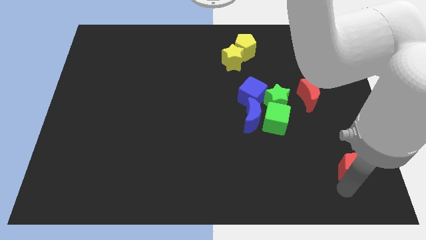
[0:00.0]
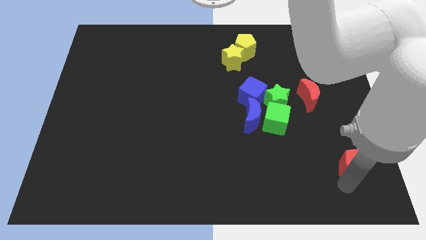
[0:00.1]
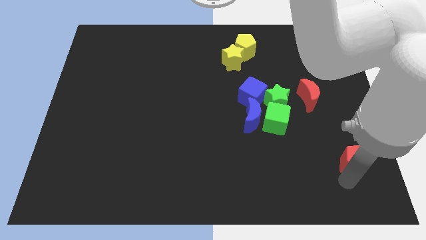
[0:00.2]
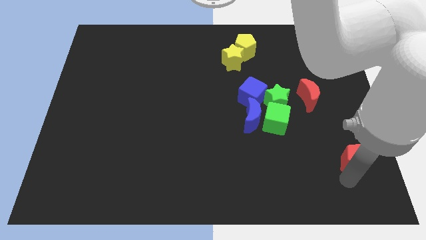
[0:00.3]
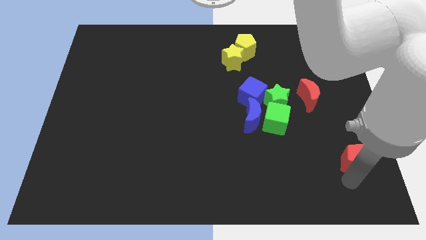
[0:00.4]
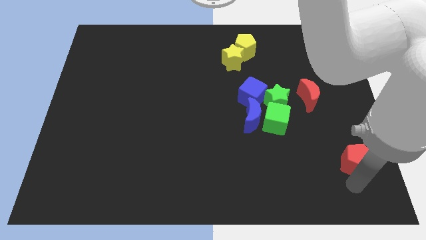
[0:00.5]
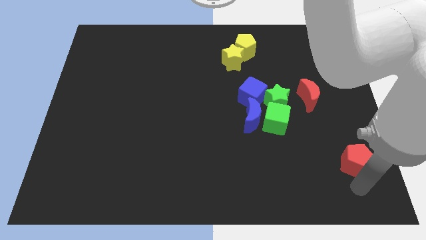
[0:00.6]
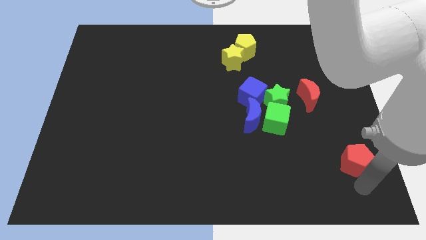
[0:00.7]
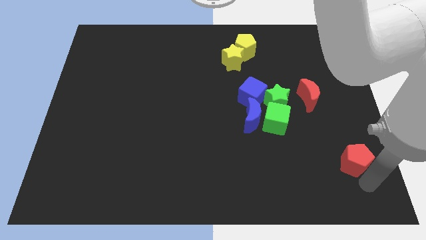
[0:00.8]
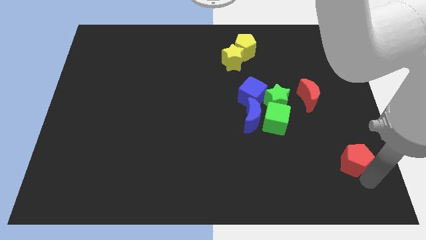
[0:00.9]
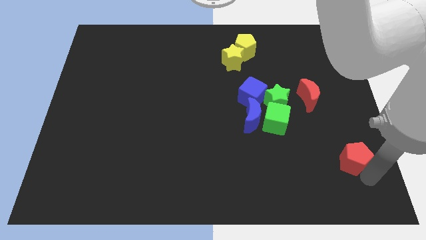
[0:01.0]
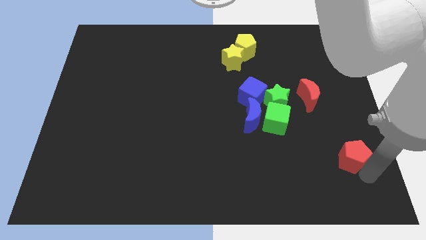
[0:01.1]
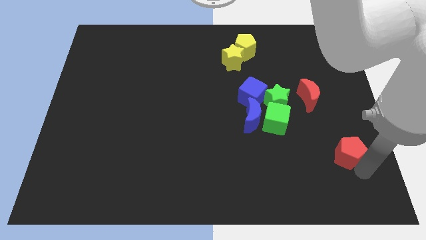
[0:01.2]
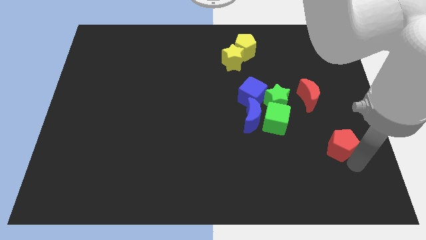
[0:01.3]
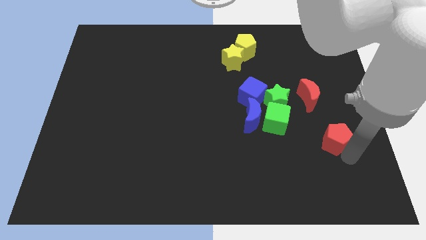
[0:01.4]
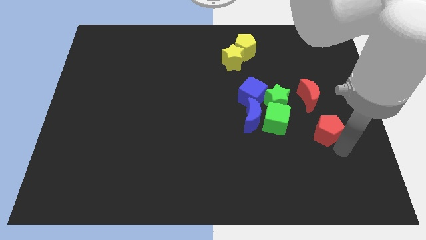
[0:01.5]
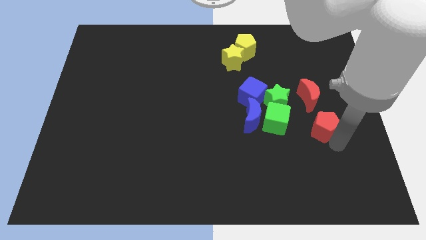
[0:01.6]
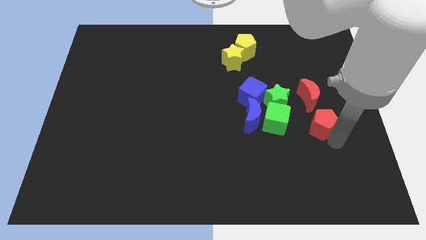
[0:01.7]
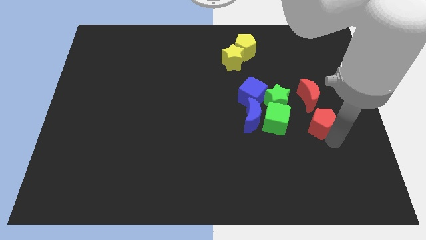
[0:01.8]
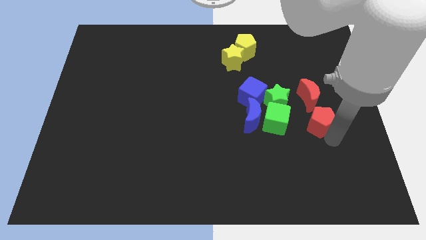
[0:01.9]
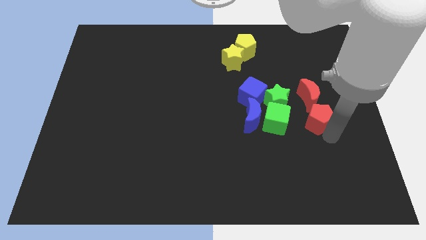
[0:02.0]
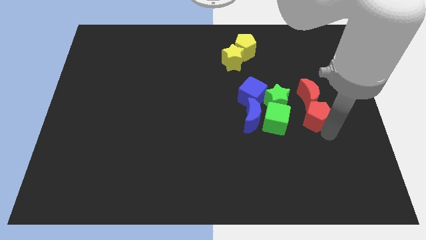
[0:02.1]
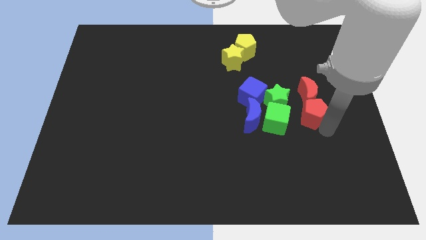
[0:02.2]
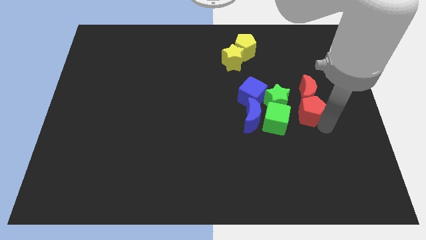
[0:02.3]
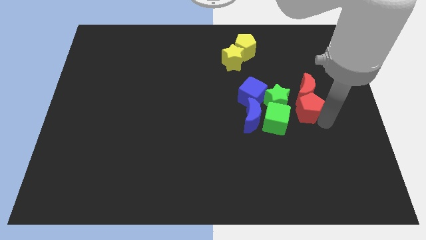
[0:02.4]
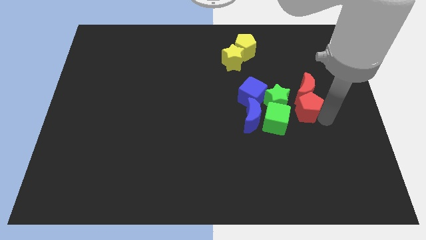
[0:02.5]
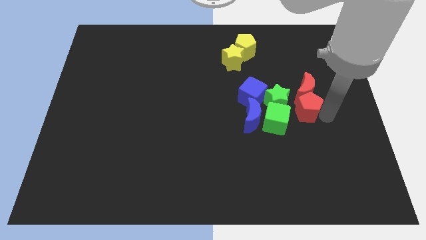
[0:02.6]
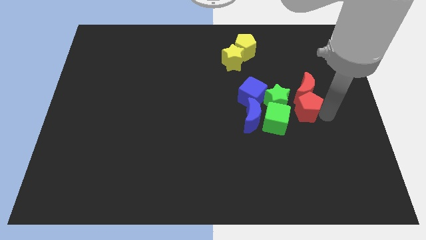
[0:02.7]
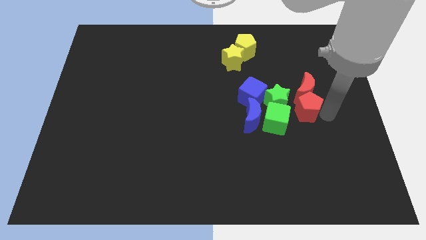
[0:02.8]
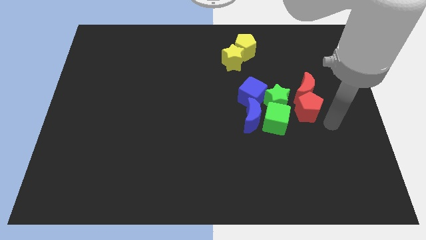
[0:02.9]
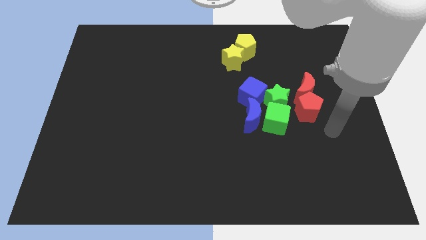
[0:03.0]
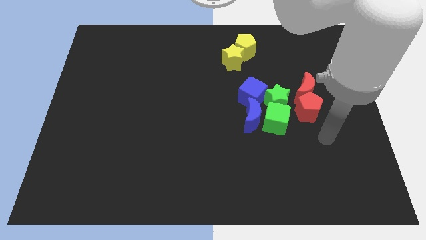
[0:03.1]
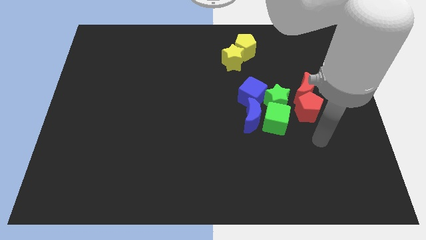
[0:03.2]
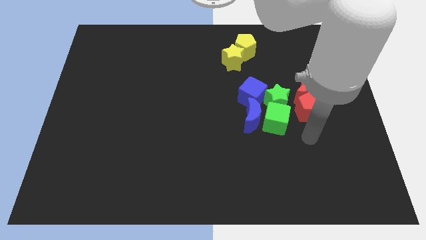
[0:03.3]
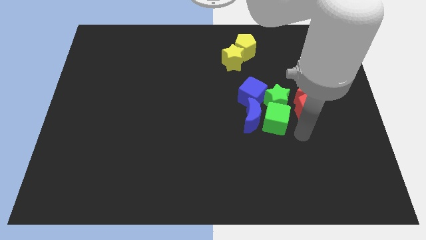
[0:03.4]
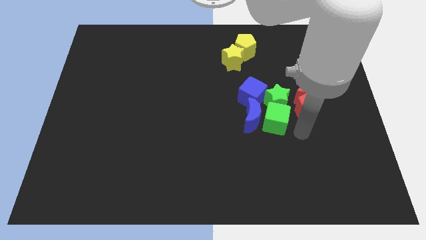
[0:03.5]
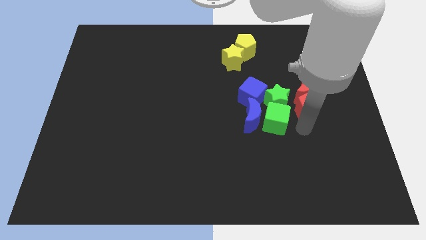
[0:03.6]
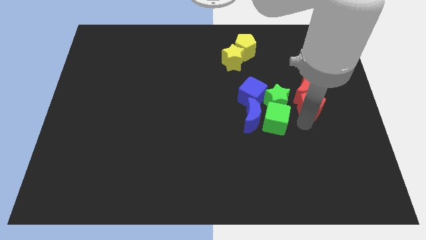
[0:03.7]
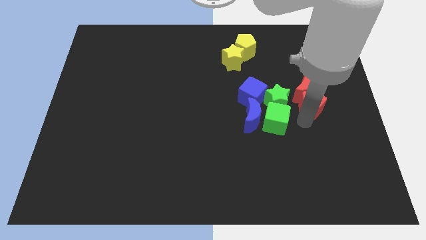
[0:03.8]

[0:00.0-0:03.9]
move red pentagon below the red crescent

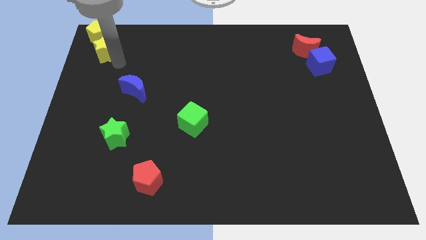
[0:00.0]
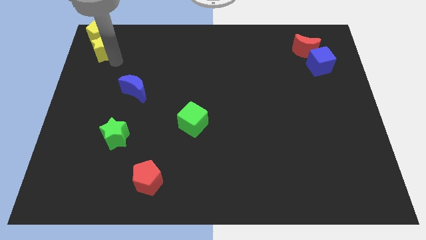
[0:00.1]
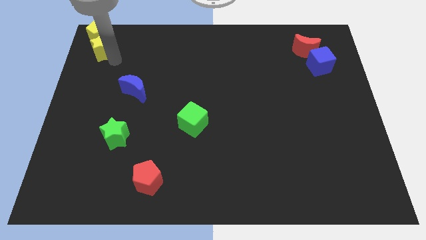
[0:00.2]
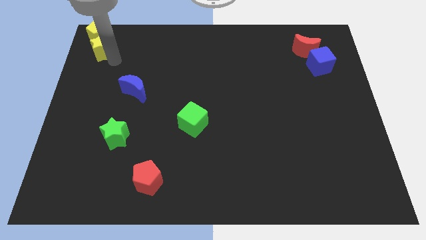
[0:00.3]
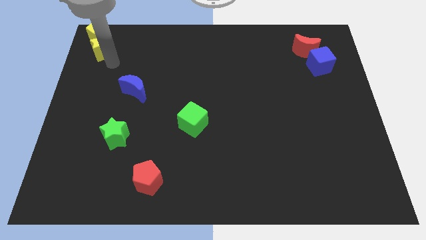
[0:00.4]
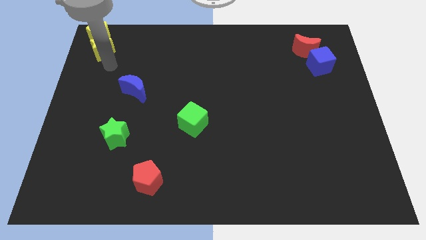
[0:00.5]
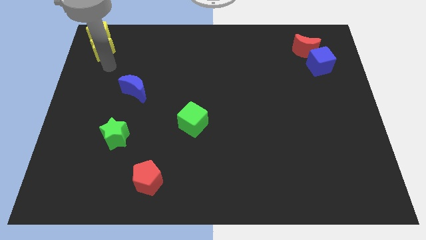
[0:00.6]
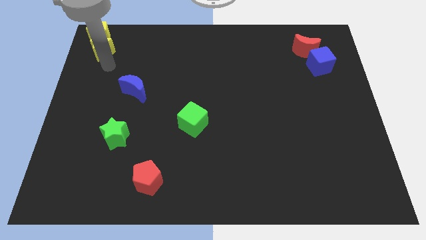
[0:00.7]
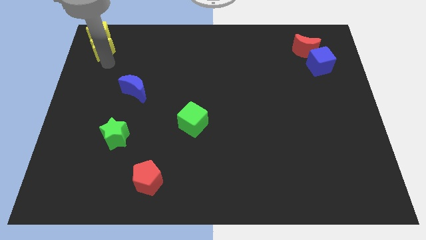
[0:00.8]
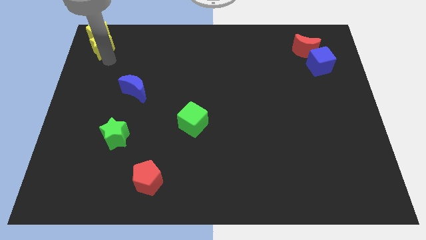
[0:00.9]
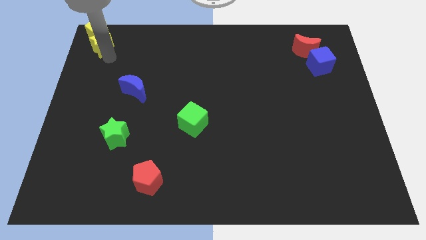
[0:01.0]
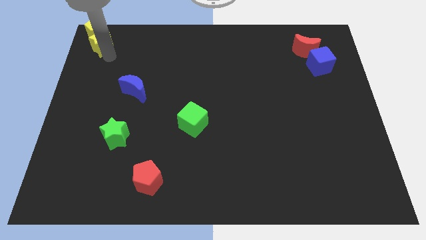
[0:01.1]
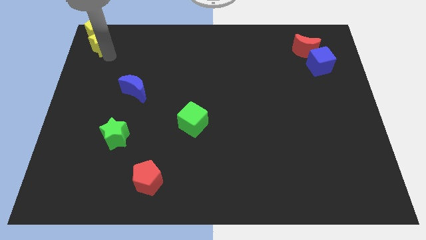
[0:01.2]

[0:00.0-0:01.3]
push yellow star towards yellow pentagon

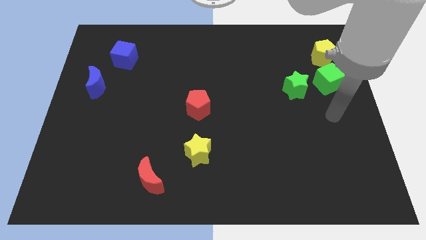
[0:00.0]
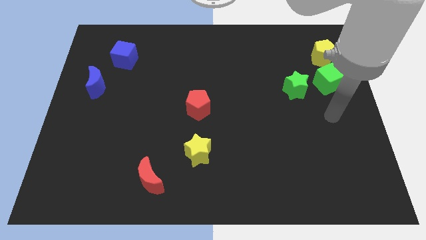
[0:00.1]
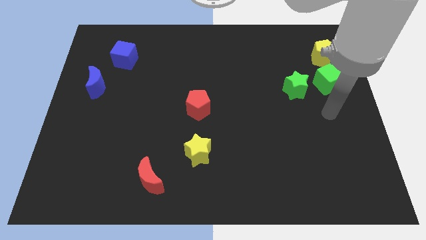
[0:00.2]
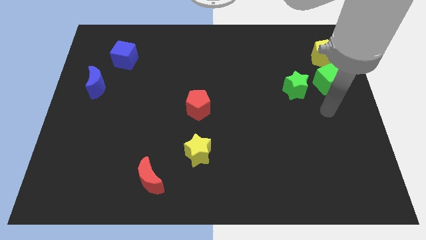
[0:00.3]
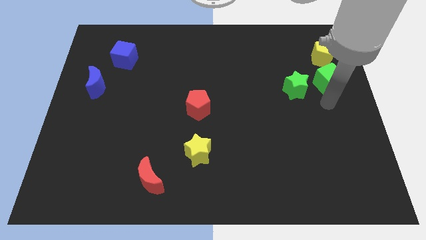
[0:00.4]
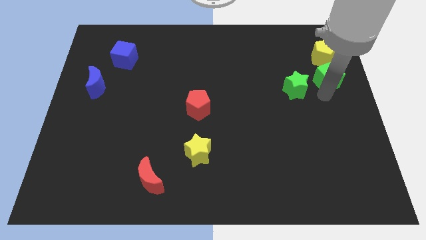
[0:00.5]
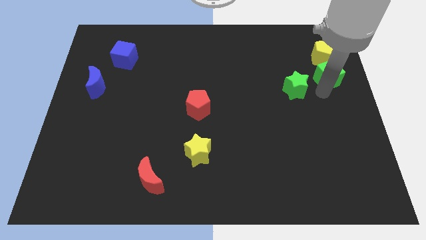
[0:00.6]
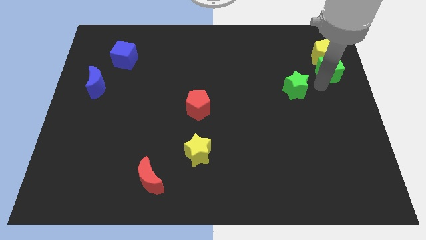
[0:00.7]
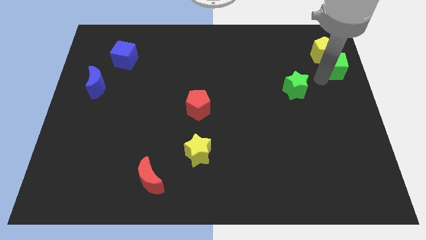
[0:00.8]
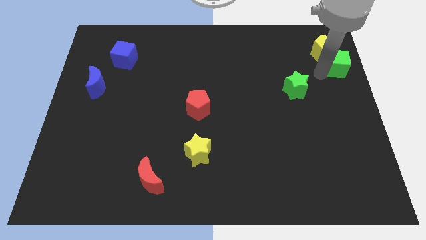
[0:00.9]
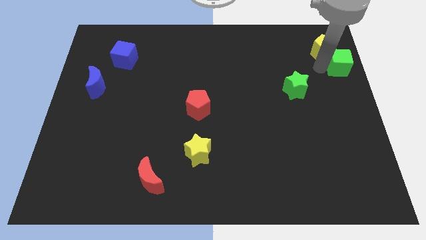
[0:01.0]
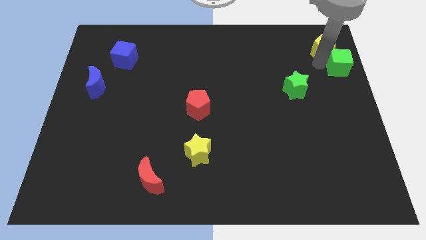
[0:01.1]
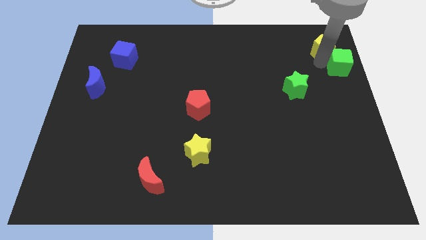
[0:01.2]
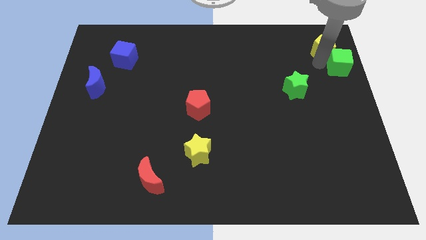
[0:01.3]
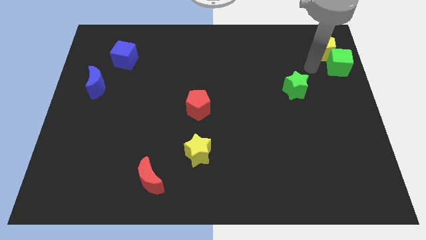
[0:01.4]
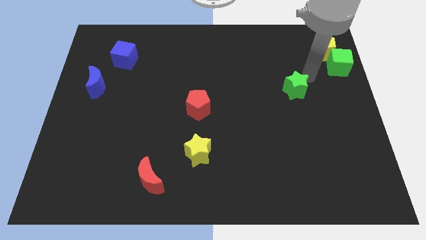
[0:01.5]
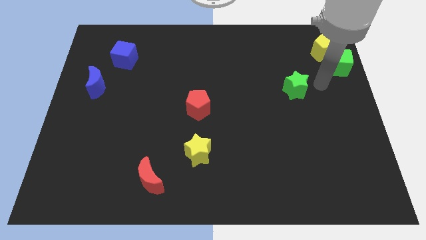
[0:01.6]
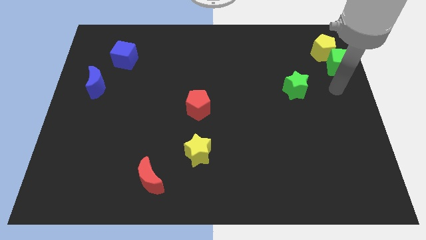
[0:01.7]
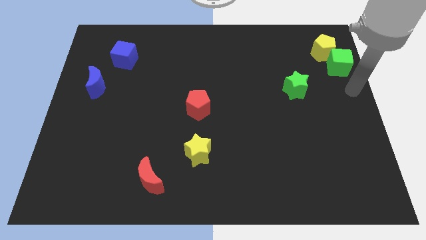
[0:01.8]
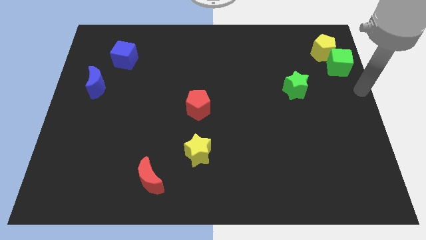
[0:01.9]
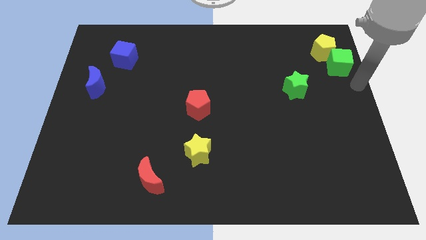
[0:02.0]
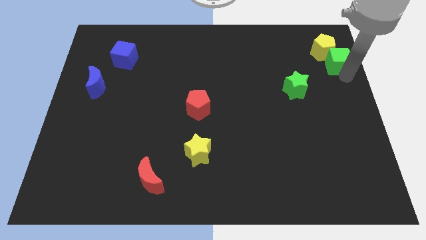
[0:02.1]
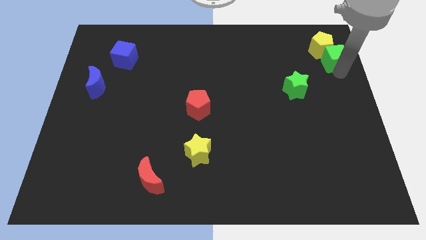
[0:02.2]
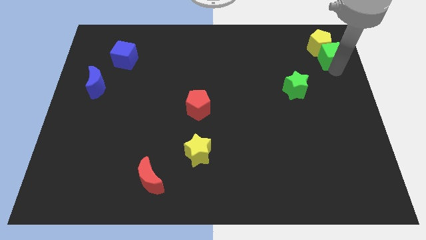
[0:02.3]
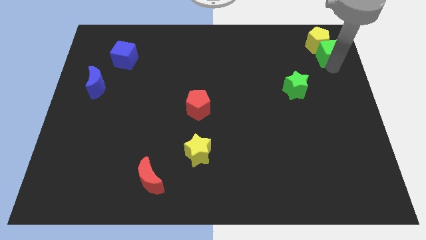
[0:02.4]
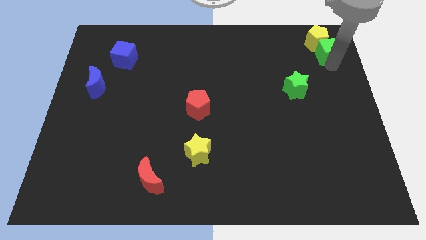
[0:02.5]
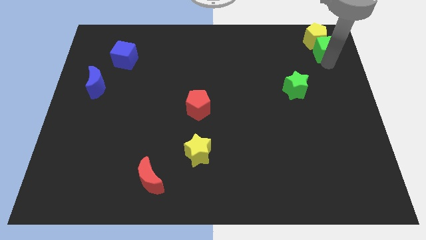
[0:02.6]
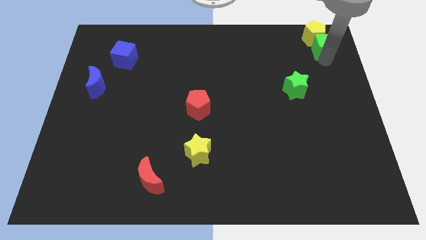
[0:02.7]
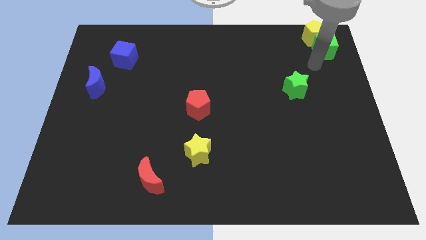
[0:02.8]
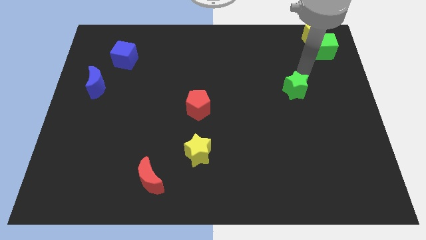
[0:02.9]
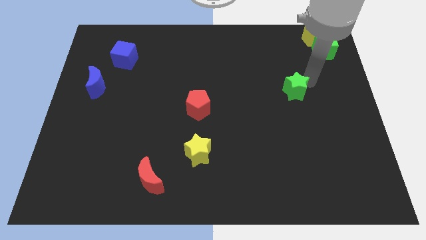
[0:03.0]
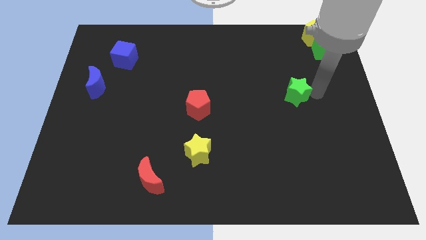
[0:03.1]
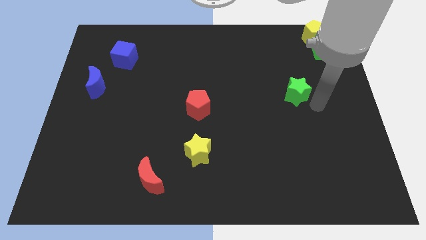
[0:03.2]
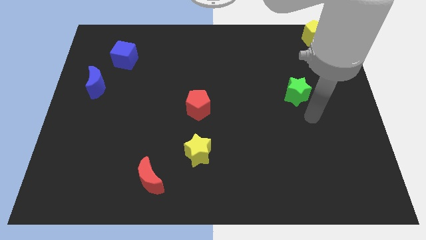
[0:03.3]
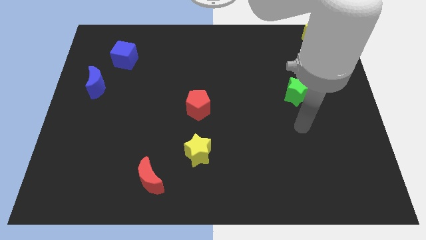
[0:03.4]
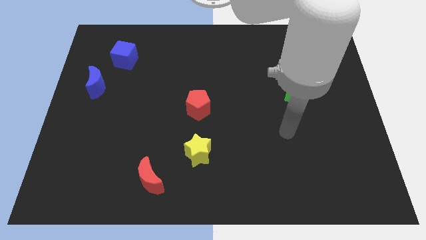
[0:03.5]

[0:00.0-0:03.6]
push the green cube to the top of the board with the yellow pentagon

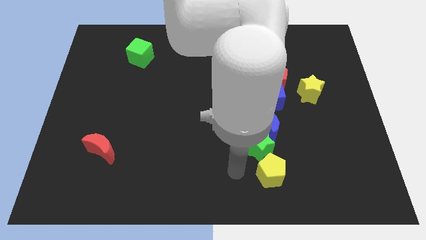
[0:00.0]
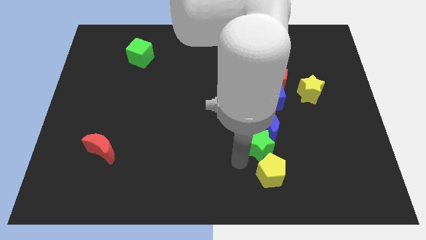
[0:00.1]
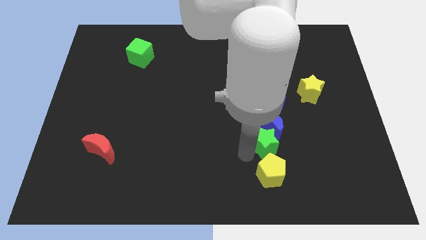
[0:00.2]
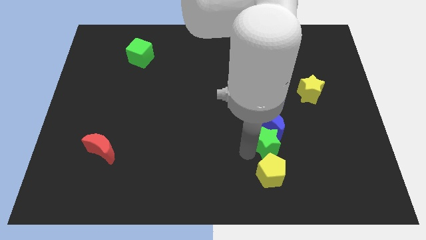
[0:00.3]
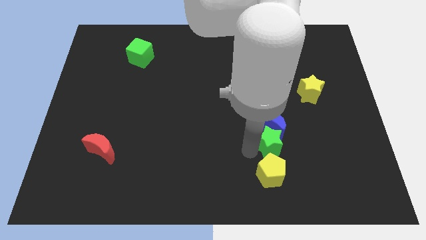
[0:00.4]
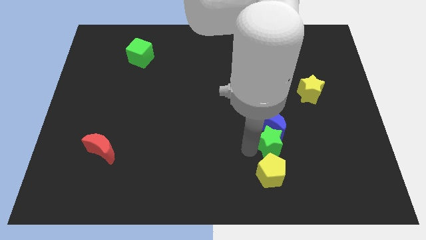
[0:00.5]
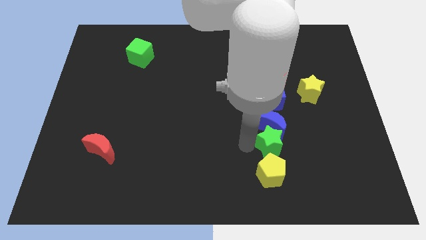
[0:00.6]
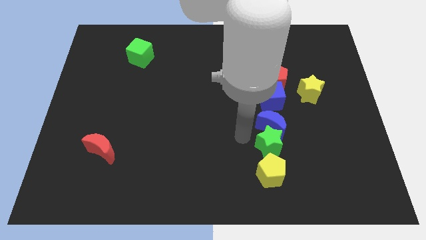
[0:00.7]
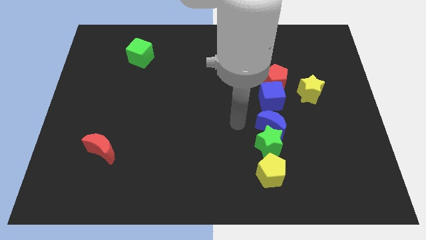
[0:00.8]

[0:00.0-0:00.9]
tap the green star
